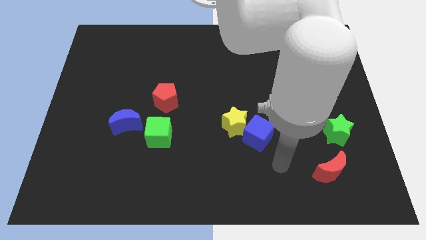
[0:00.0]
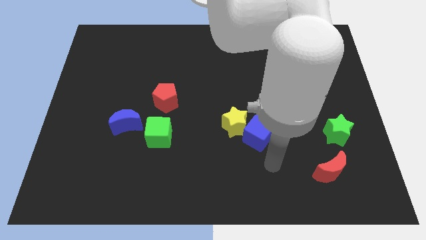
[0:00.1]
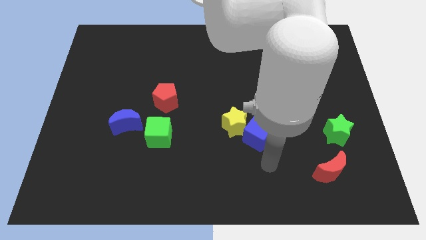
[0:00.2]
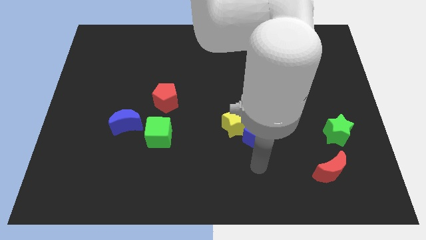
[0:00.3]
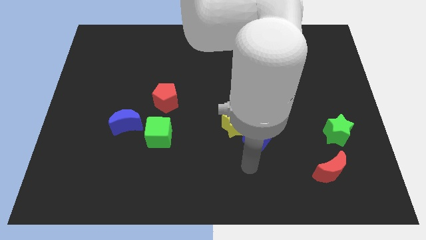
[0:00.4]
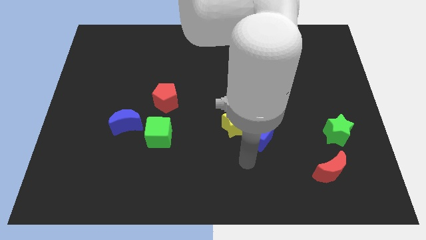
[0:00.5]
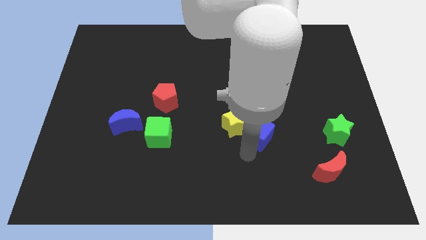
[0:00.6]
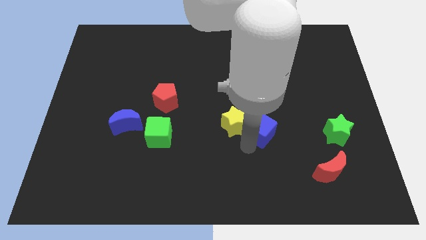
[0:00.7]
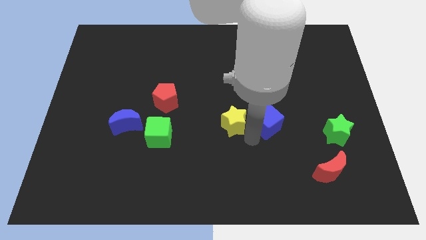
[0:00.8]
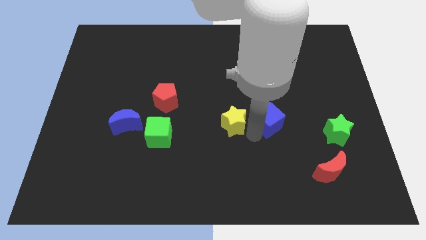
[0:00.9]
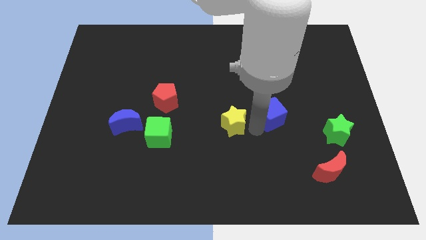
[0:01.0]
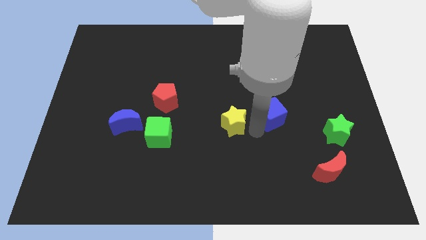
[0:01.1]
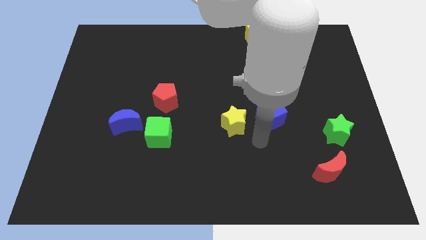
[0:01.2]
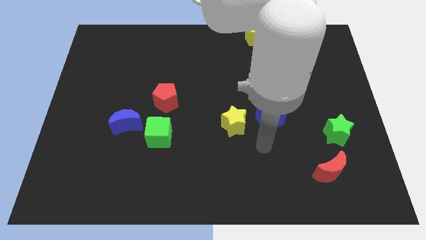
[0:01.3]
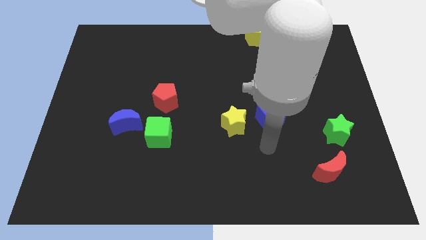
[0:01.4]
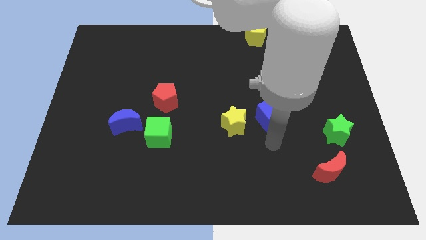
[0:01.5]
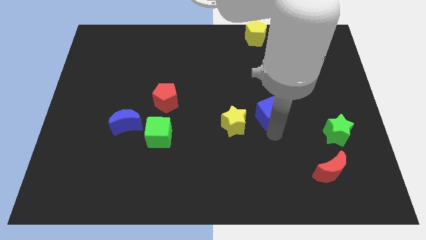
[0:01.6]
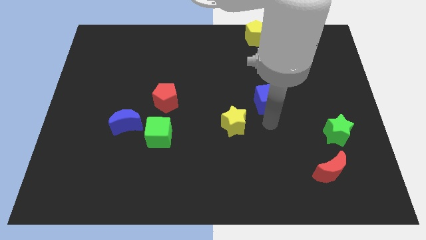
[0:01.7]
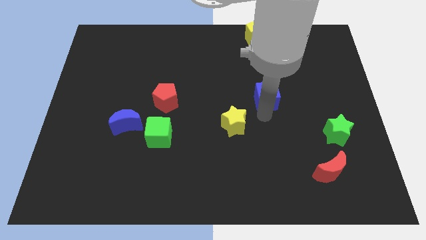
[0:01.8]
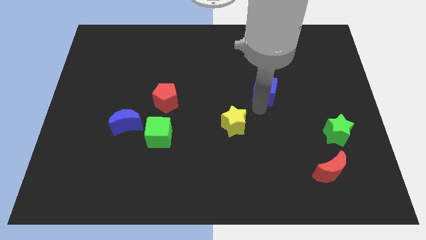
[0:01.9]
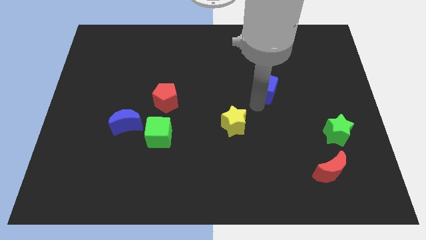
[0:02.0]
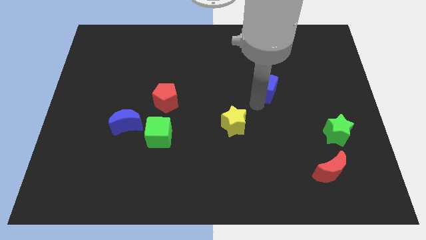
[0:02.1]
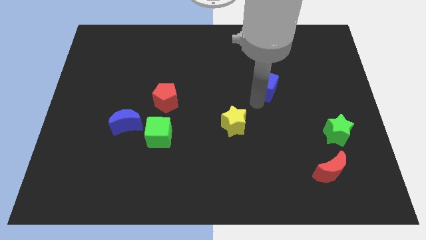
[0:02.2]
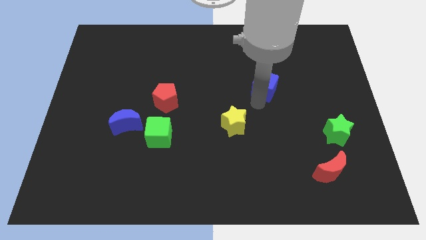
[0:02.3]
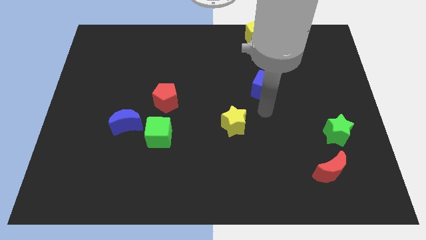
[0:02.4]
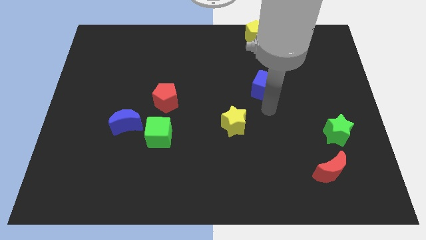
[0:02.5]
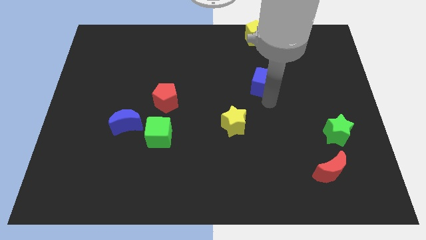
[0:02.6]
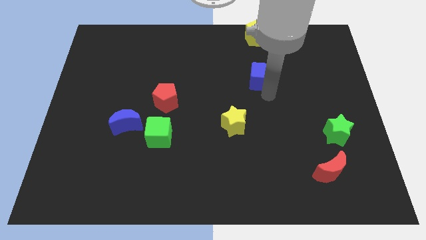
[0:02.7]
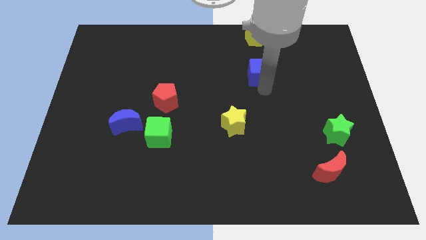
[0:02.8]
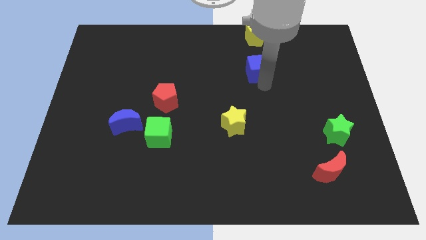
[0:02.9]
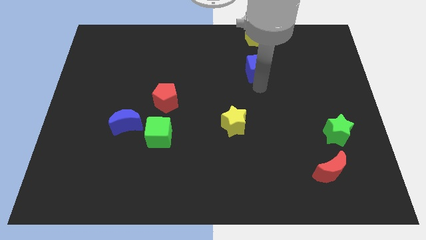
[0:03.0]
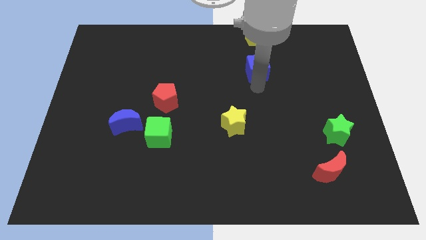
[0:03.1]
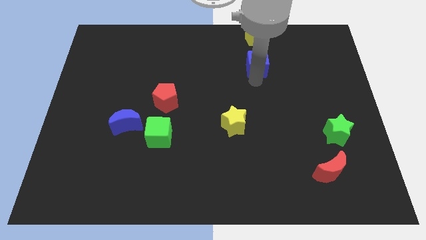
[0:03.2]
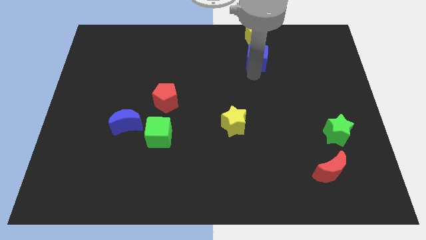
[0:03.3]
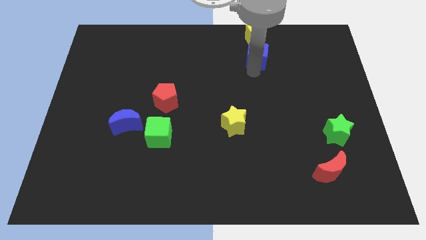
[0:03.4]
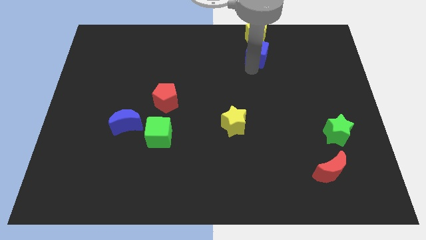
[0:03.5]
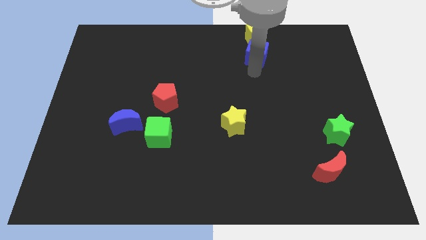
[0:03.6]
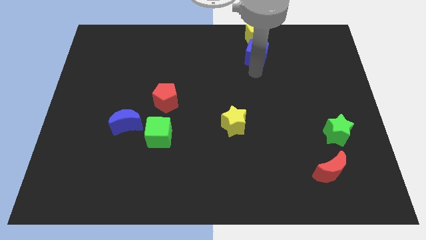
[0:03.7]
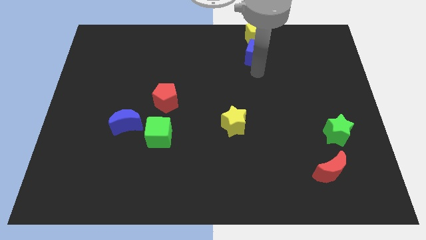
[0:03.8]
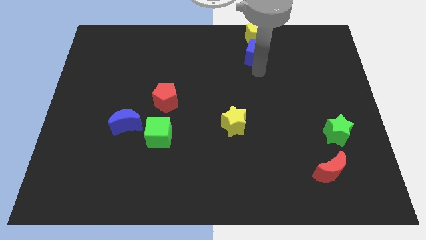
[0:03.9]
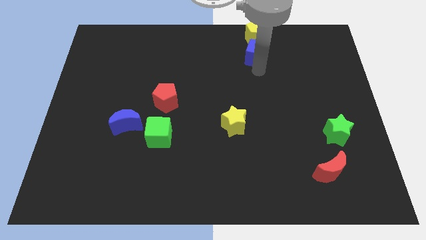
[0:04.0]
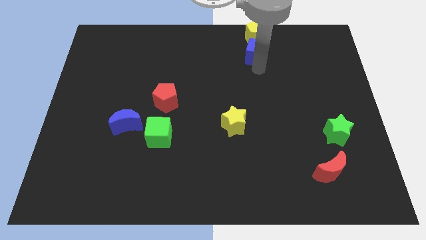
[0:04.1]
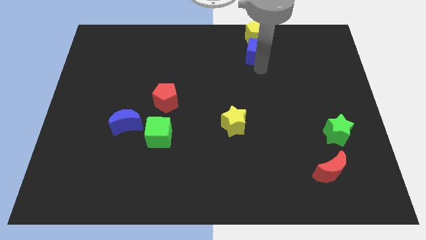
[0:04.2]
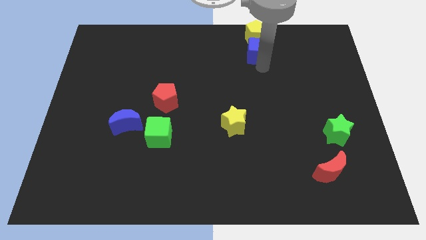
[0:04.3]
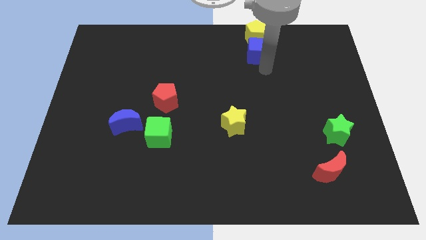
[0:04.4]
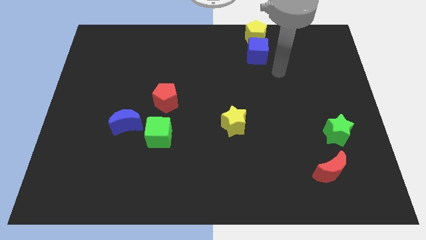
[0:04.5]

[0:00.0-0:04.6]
place the blue cube below the yellow pentagon

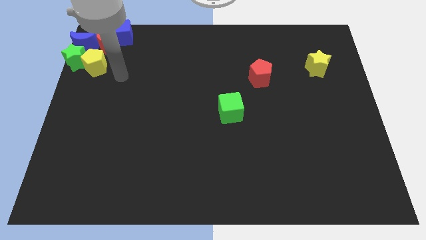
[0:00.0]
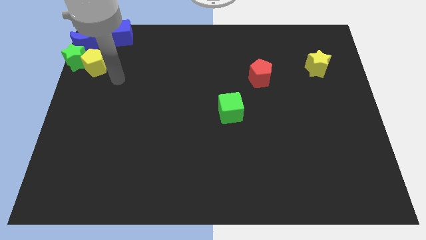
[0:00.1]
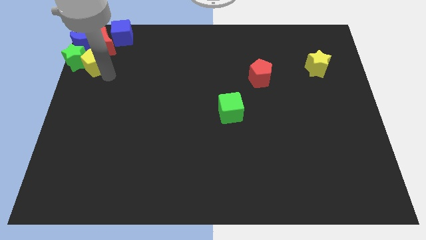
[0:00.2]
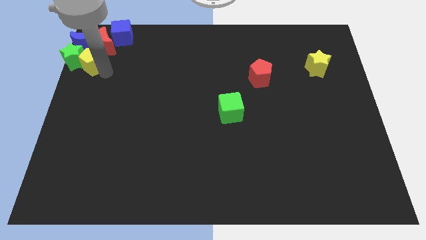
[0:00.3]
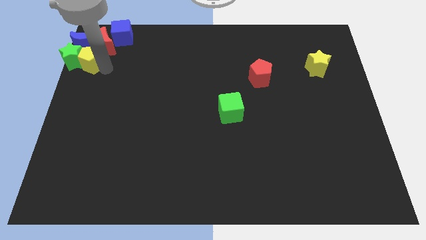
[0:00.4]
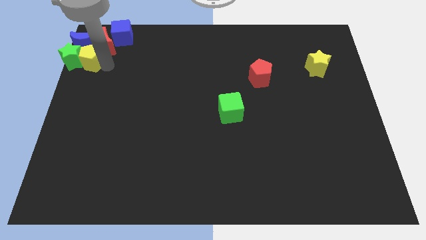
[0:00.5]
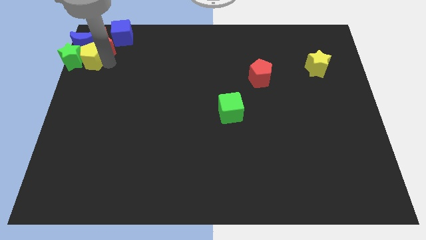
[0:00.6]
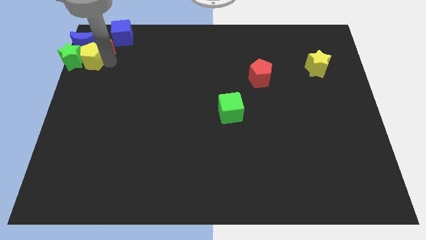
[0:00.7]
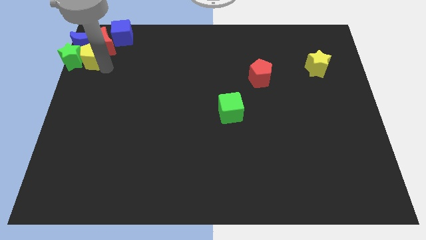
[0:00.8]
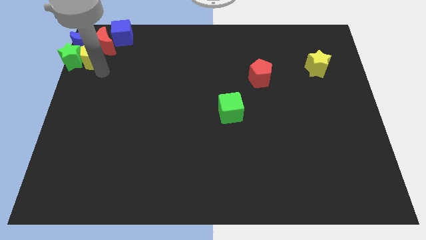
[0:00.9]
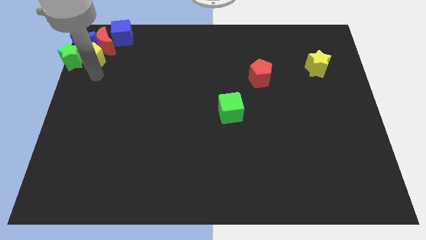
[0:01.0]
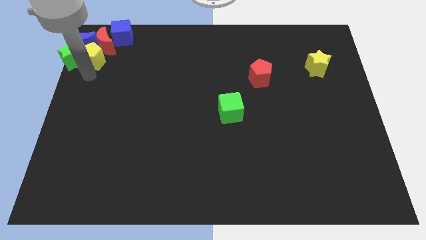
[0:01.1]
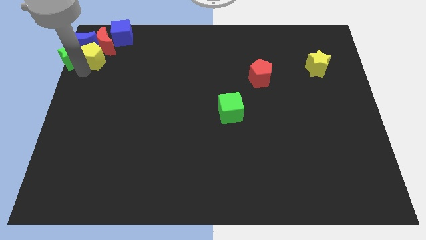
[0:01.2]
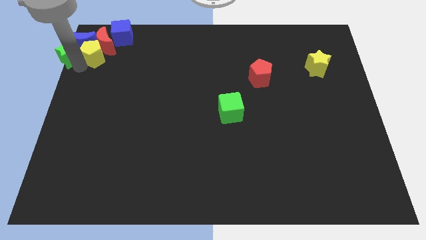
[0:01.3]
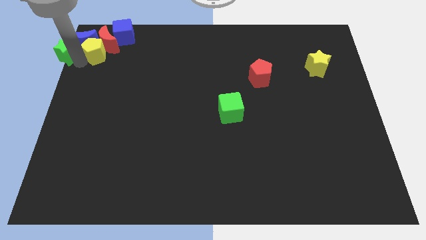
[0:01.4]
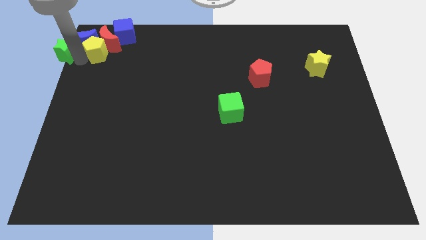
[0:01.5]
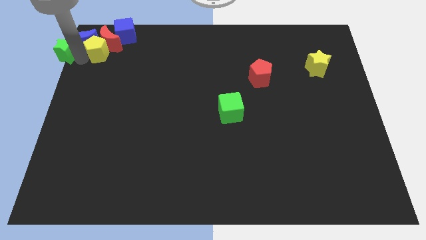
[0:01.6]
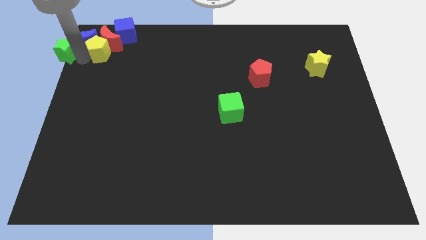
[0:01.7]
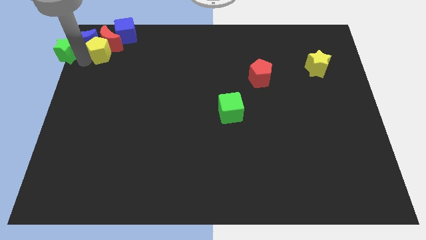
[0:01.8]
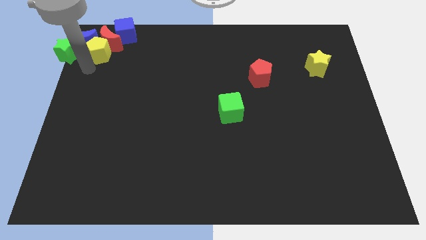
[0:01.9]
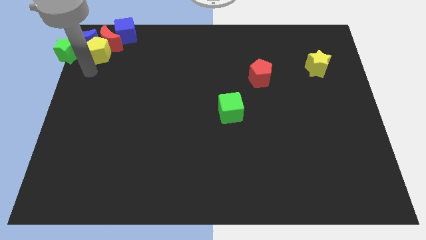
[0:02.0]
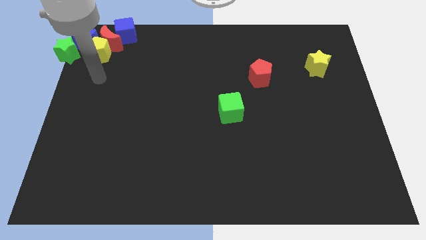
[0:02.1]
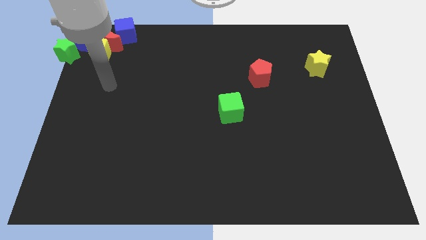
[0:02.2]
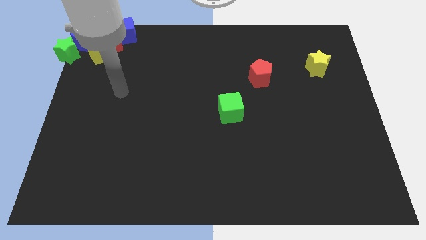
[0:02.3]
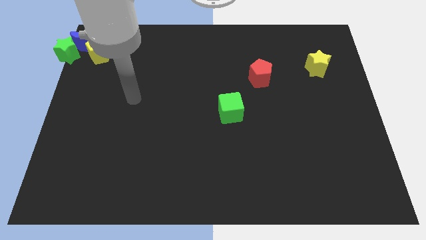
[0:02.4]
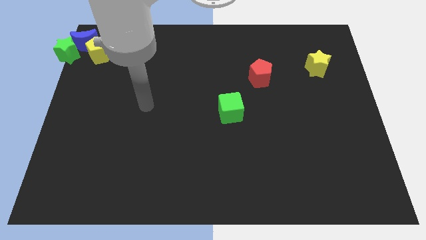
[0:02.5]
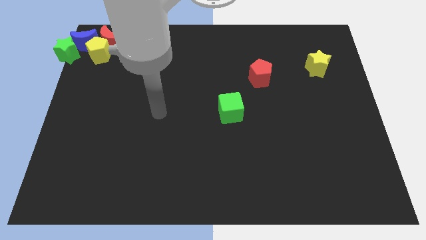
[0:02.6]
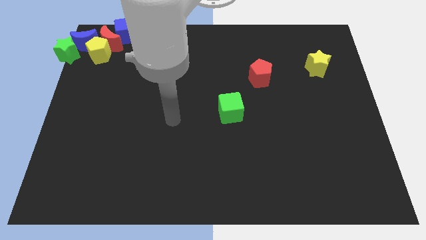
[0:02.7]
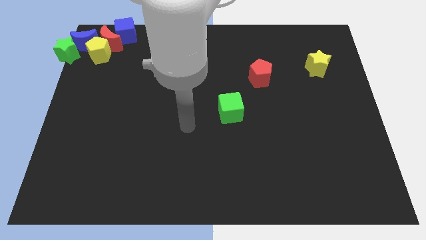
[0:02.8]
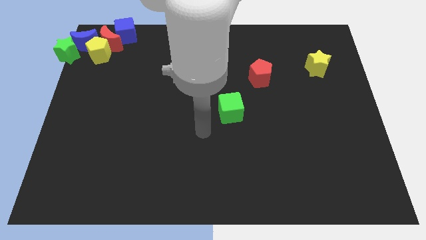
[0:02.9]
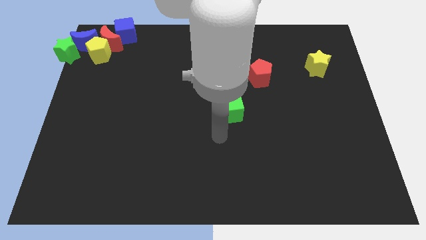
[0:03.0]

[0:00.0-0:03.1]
move the arm to the center of the board

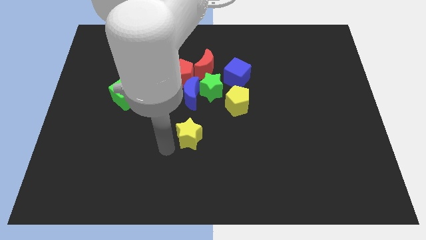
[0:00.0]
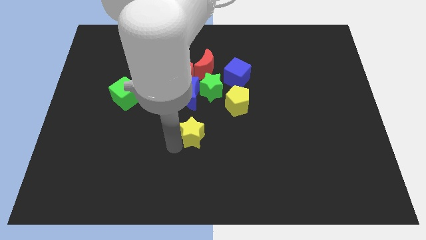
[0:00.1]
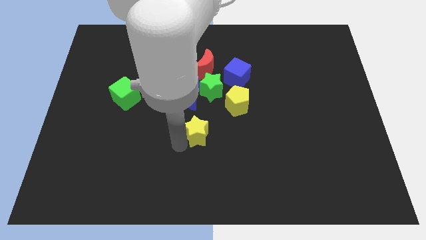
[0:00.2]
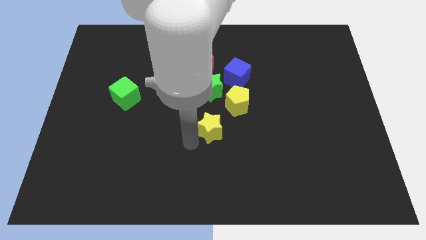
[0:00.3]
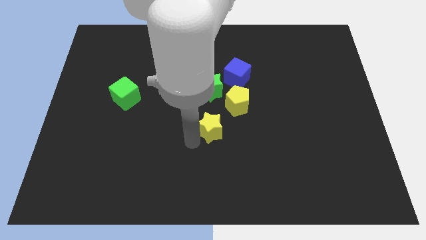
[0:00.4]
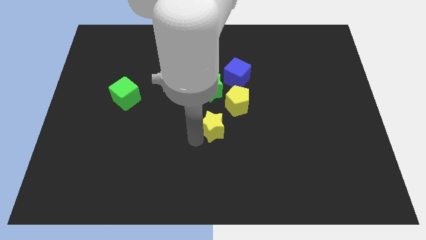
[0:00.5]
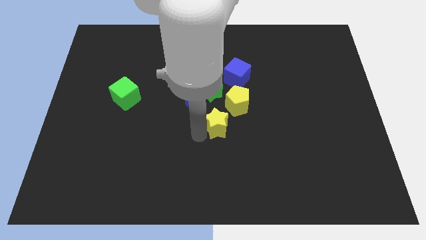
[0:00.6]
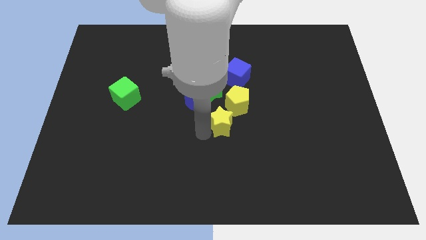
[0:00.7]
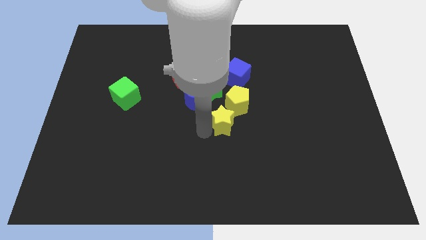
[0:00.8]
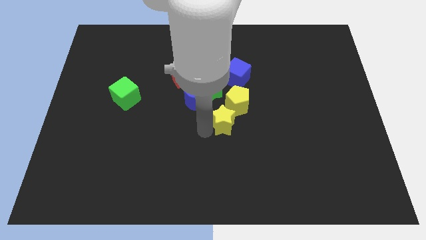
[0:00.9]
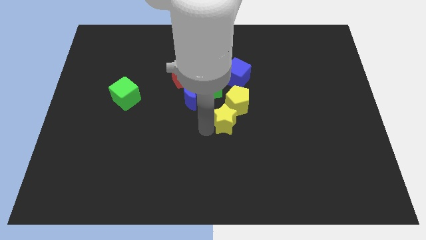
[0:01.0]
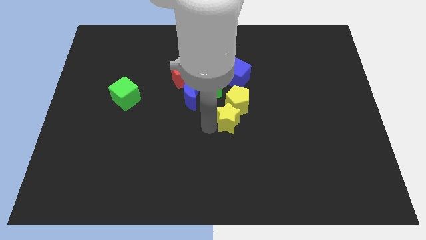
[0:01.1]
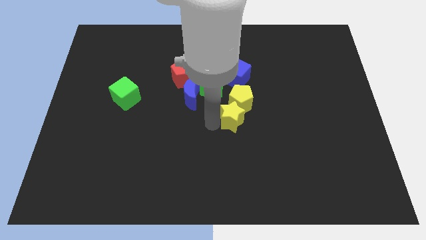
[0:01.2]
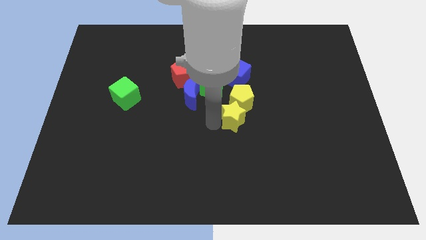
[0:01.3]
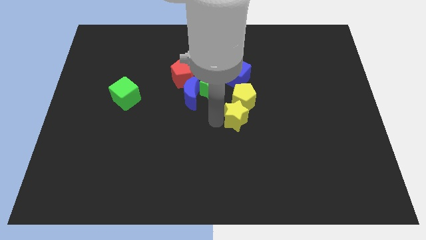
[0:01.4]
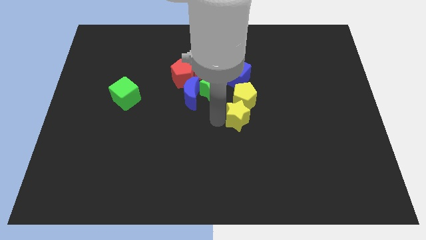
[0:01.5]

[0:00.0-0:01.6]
move the yellow star into the yellow pentagon
